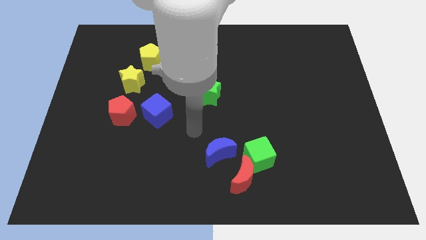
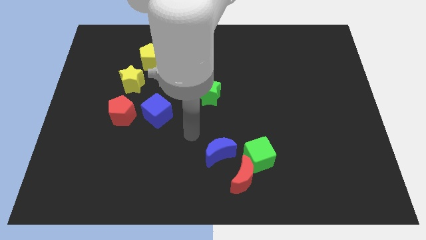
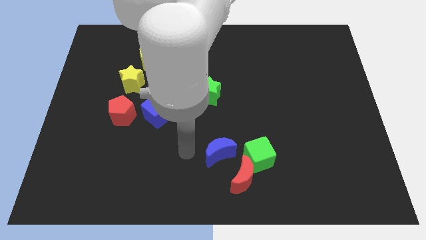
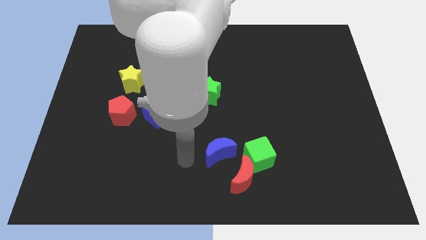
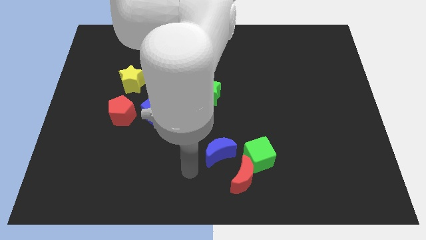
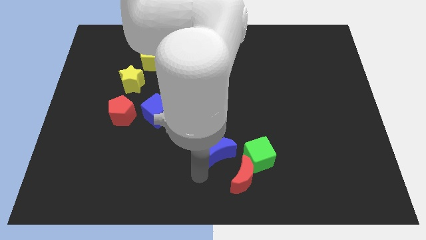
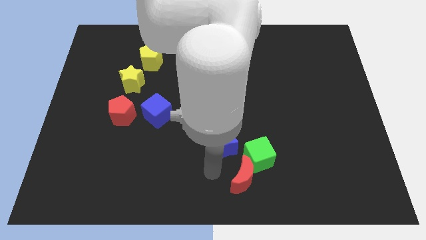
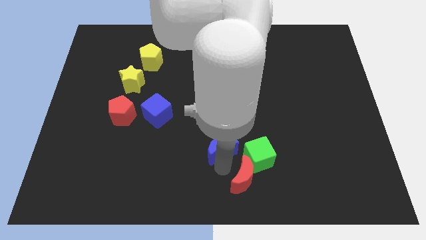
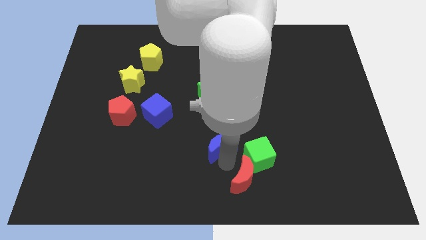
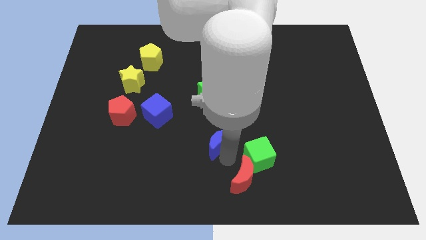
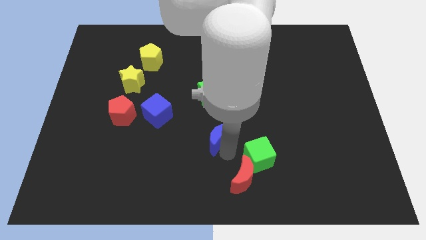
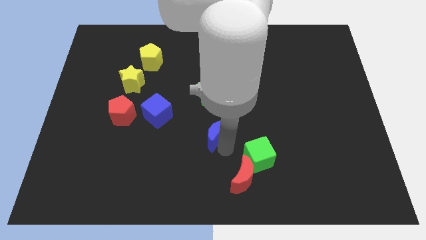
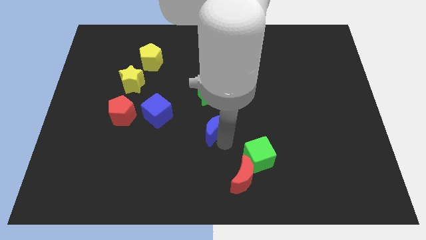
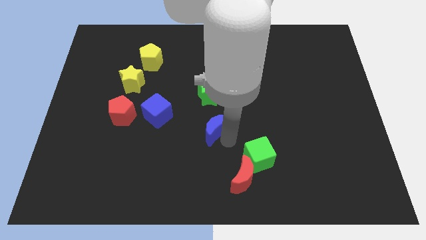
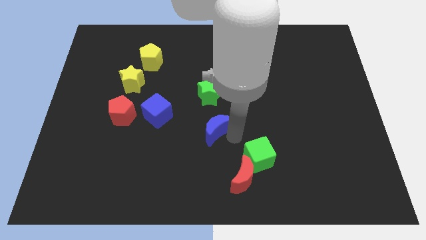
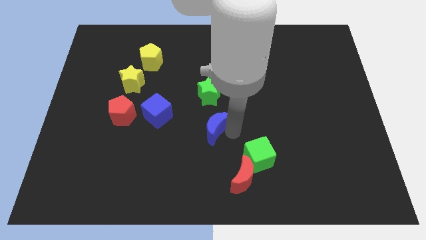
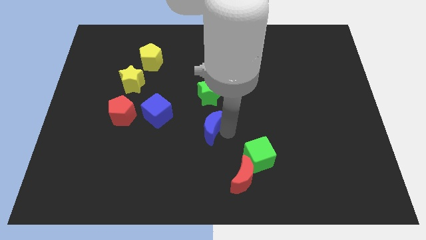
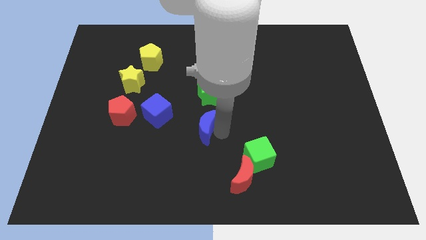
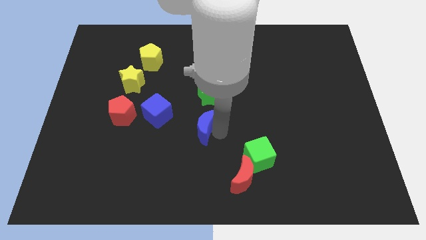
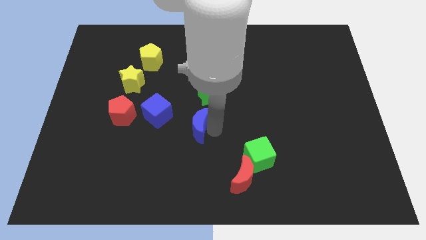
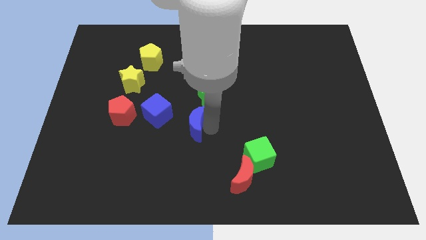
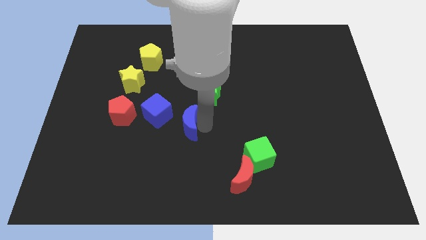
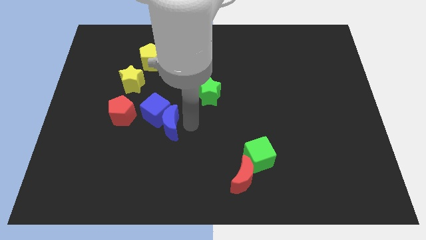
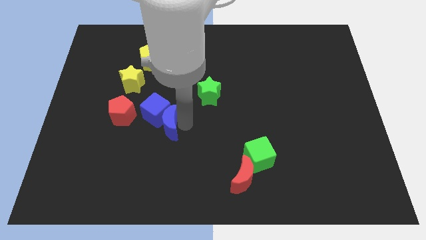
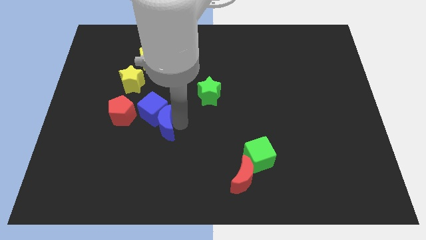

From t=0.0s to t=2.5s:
push the blue moon towards the blue cube

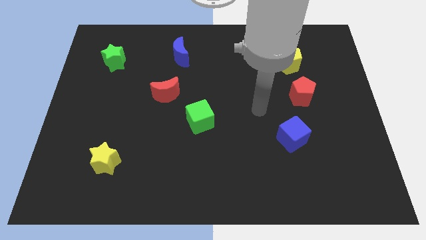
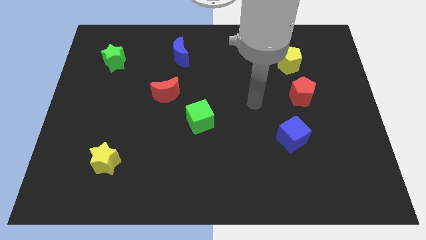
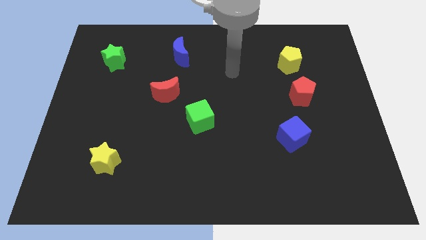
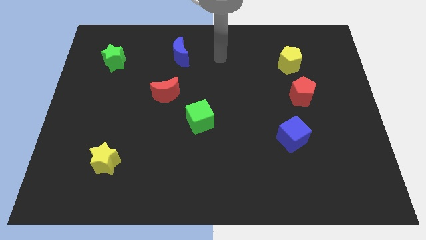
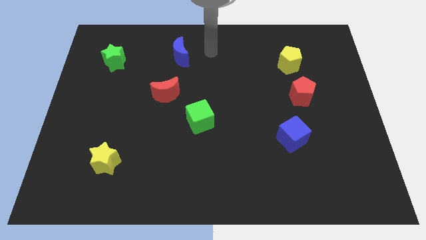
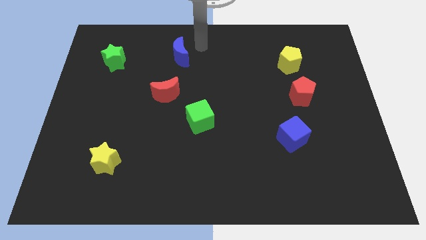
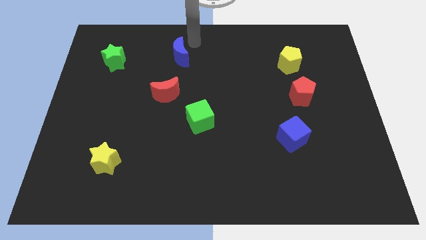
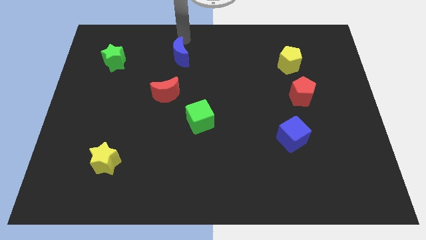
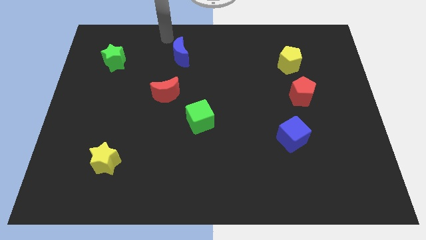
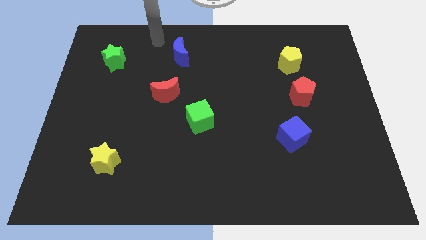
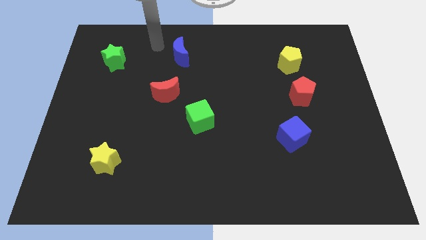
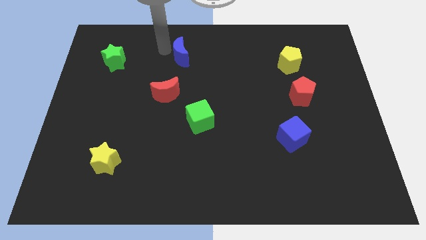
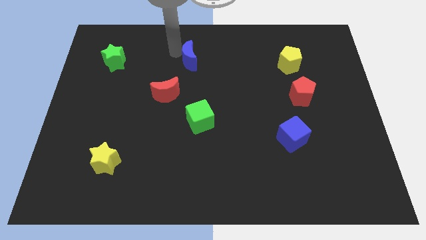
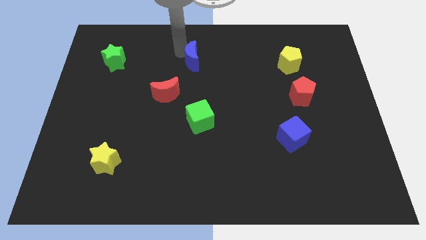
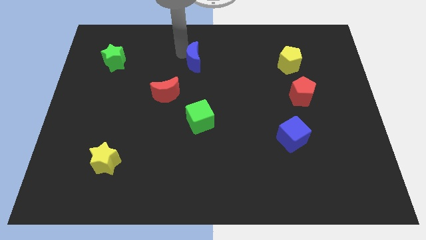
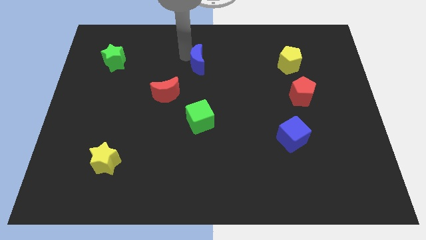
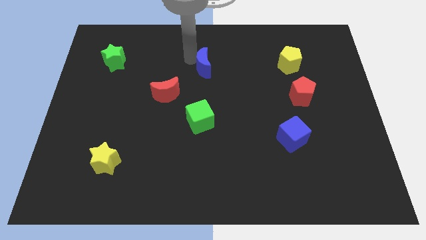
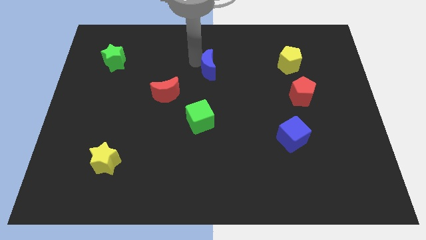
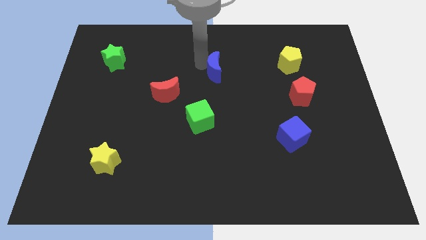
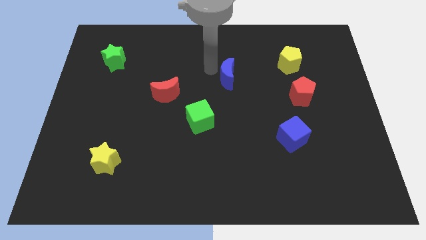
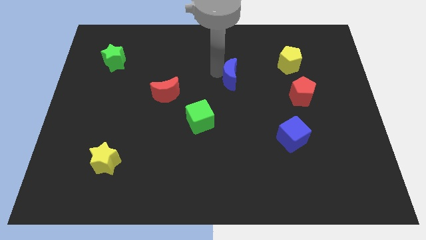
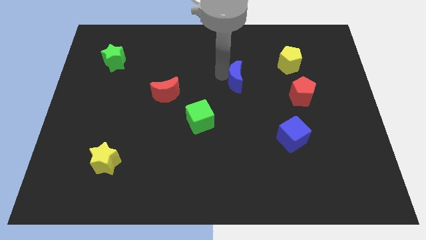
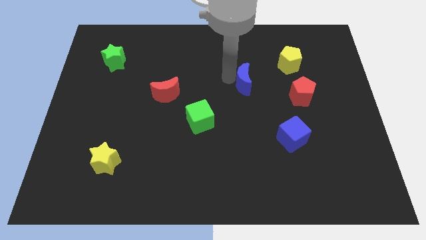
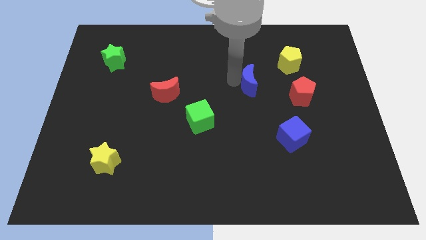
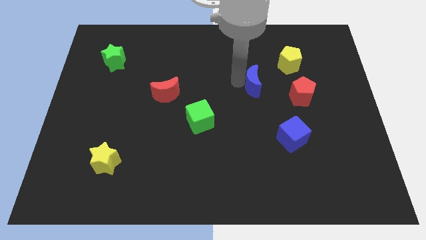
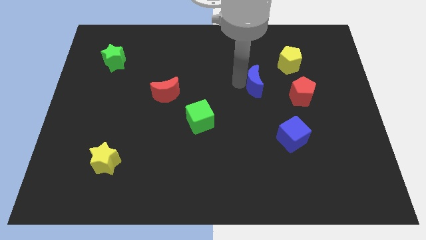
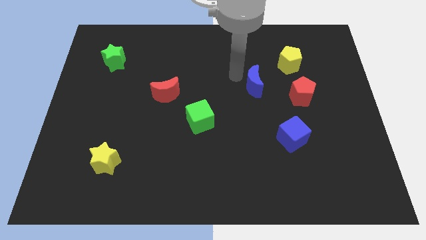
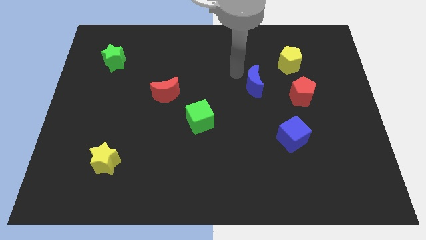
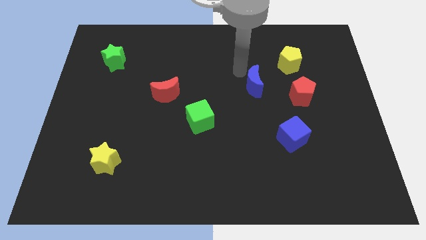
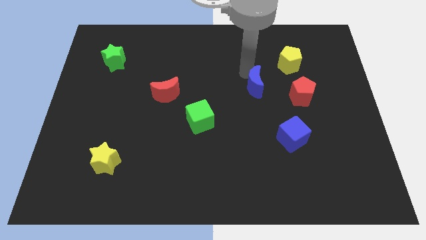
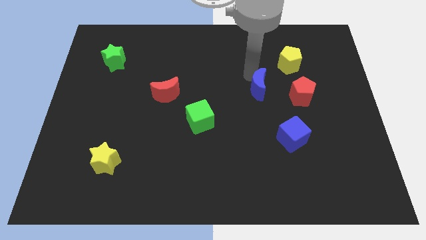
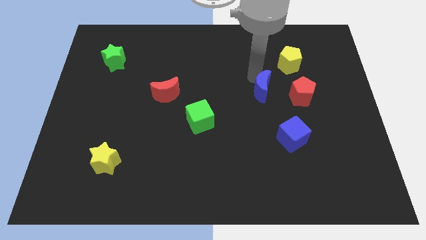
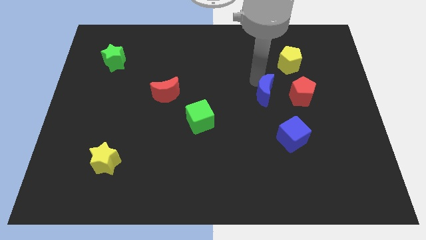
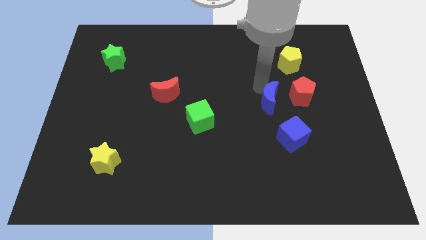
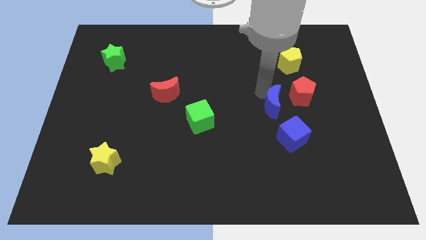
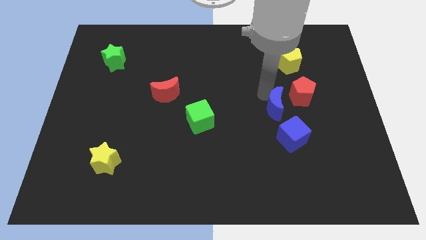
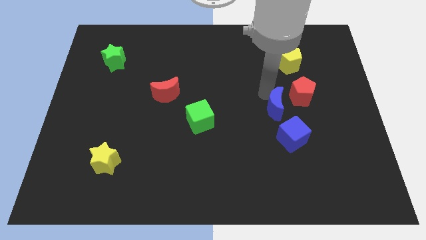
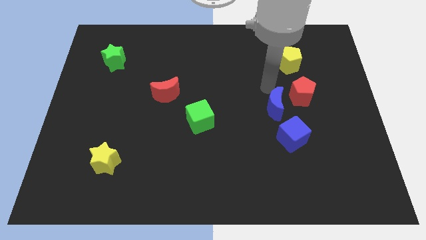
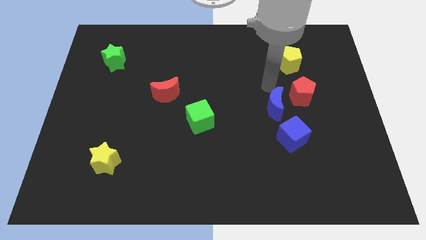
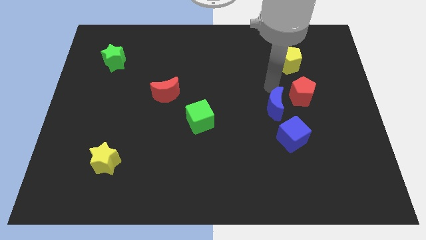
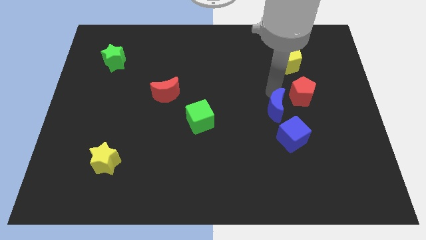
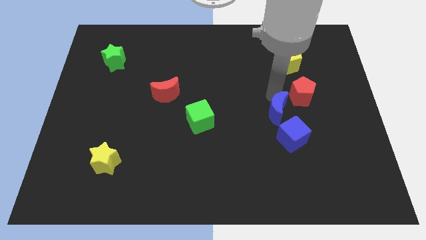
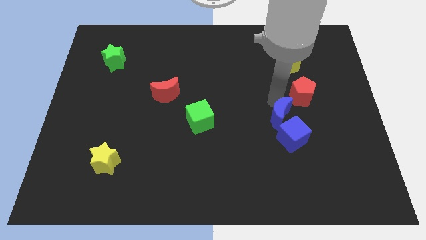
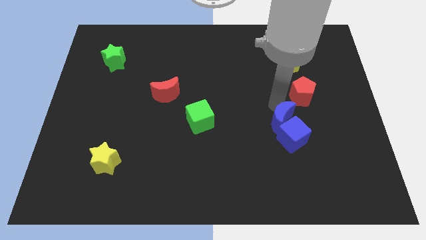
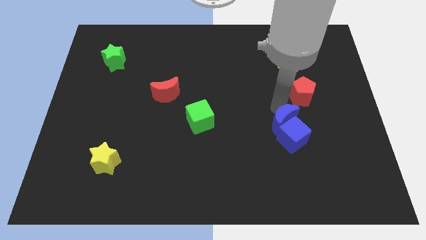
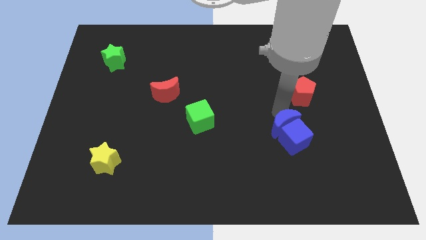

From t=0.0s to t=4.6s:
move the blue moon towards the blue cube

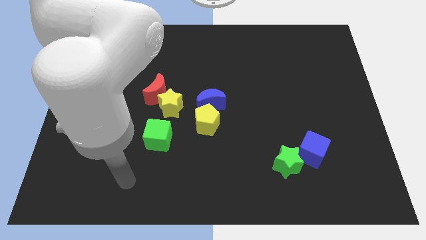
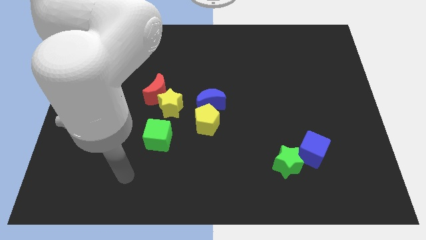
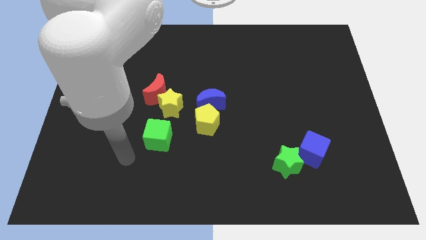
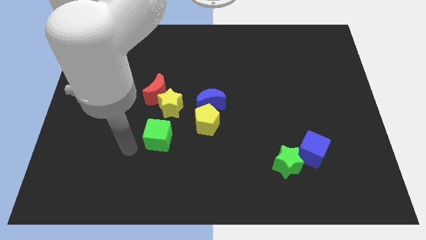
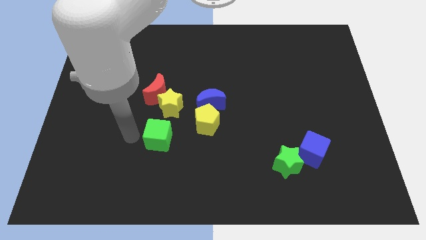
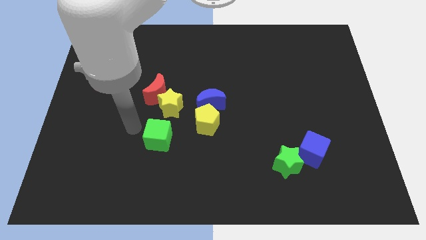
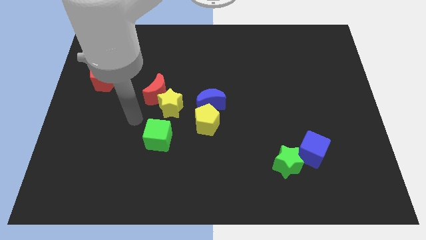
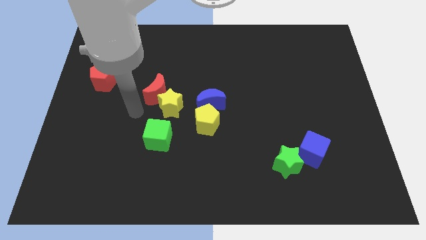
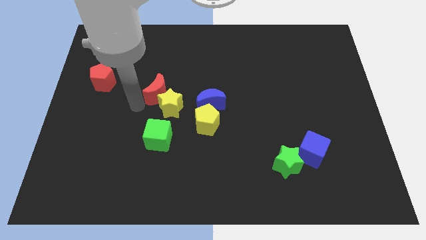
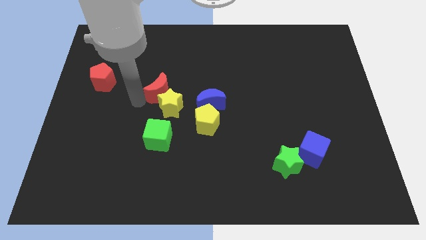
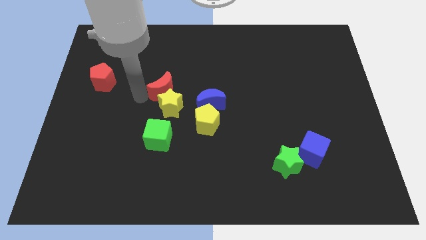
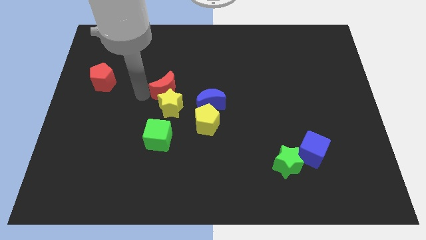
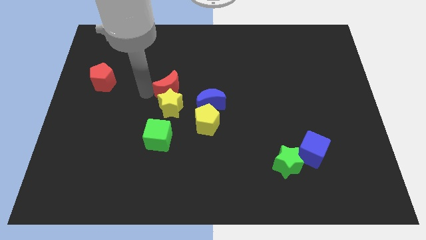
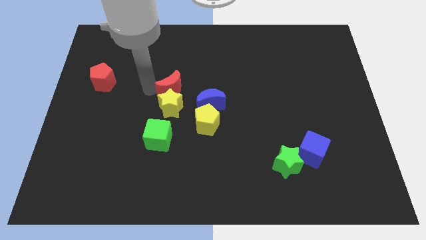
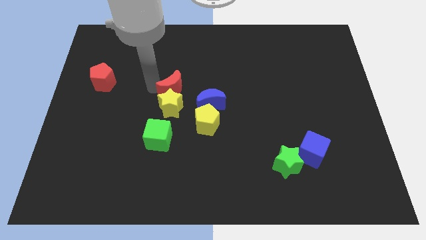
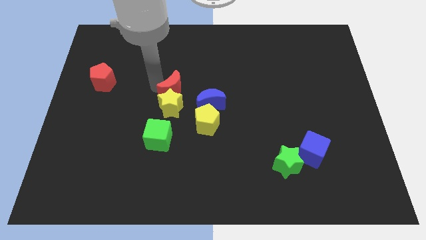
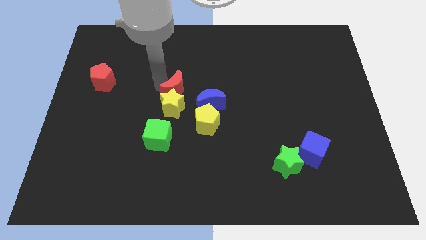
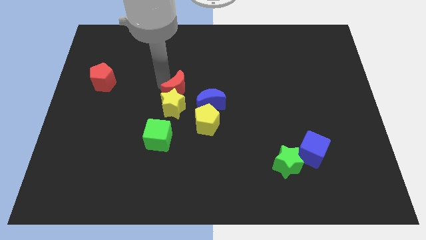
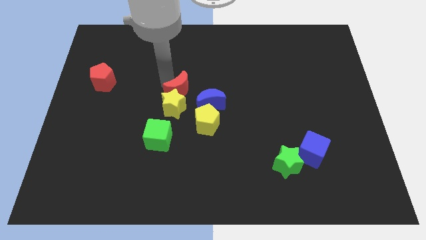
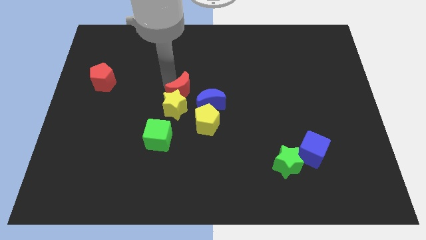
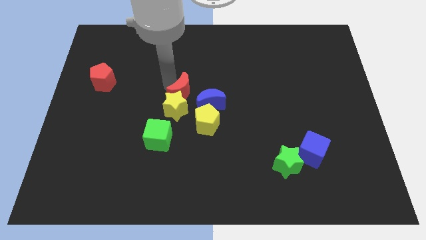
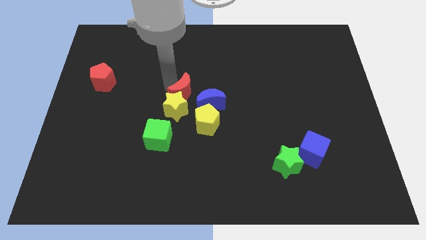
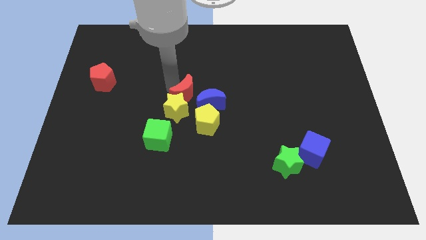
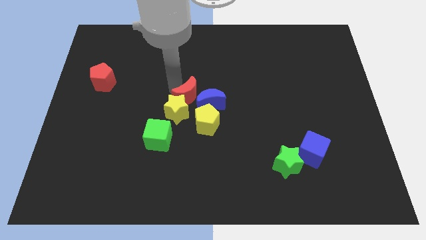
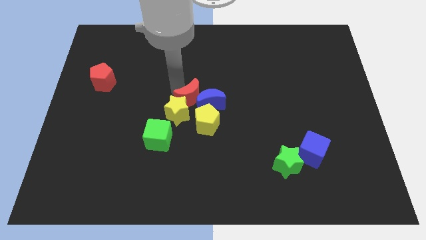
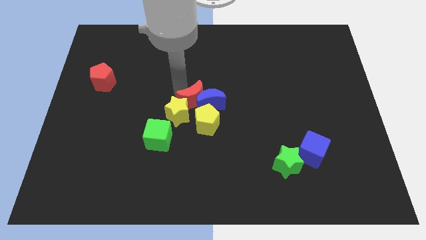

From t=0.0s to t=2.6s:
push the red moon to the blue moon
